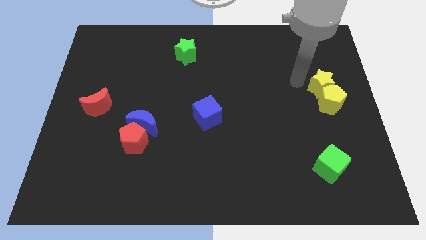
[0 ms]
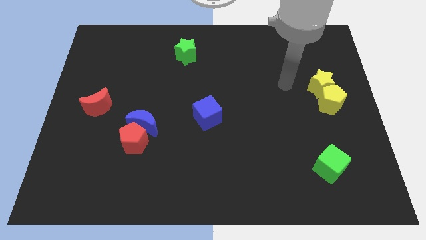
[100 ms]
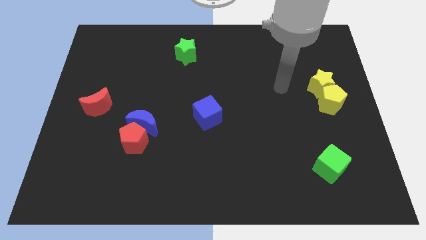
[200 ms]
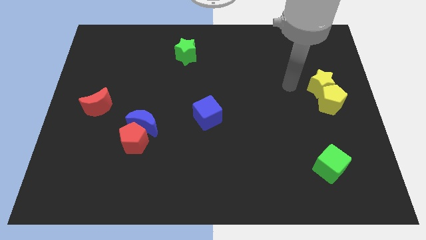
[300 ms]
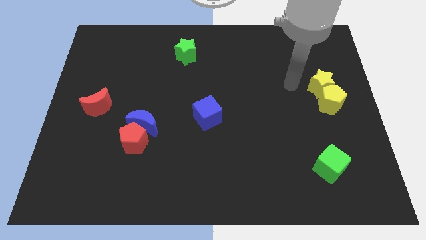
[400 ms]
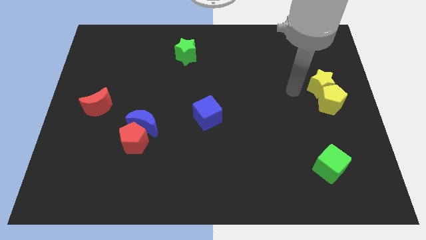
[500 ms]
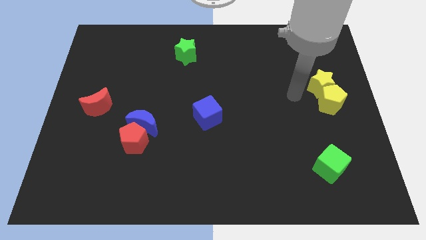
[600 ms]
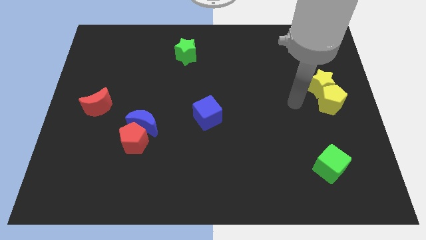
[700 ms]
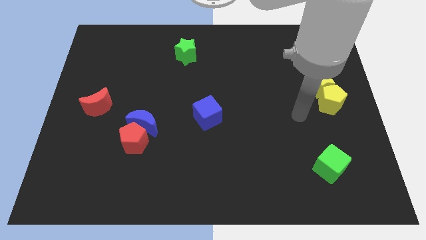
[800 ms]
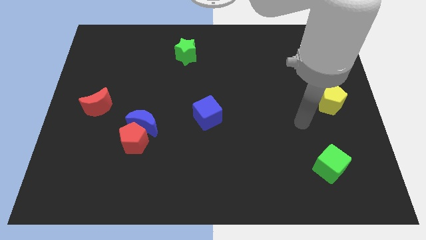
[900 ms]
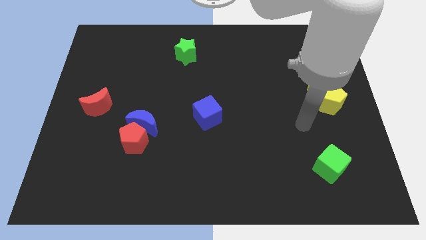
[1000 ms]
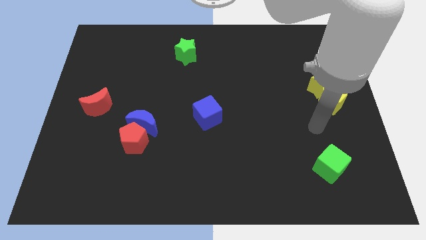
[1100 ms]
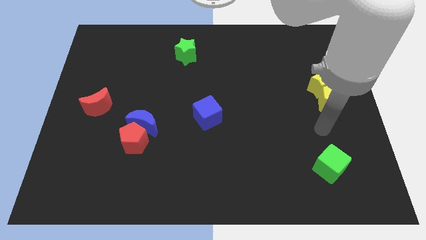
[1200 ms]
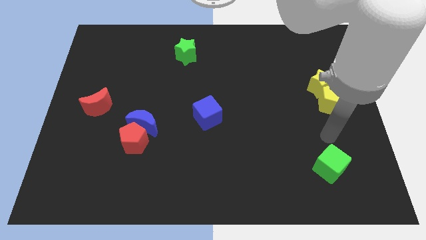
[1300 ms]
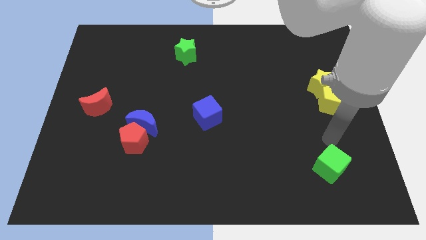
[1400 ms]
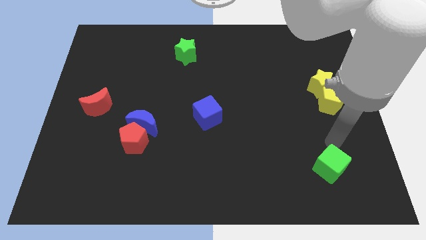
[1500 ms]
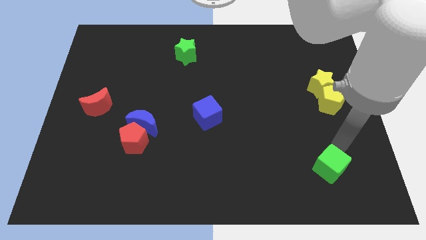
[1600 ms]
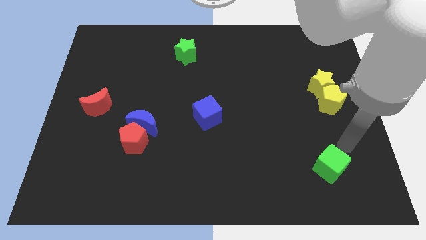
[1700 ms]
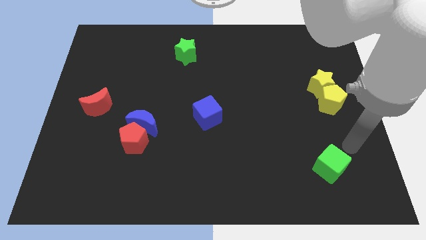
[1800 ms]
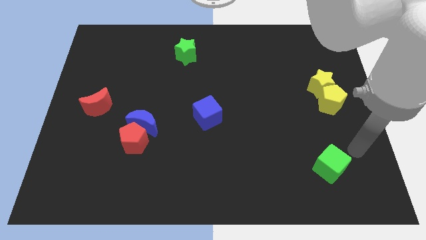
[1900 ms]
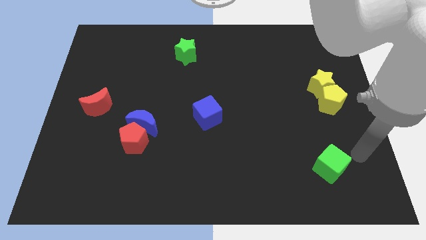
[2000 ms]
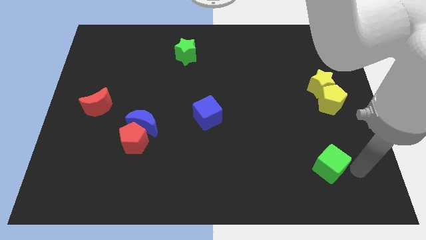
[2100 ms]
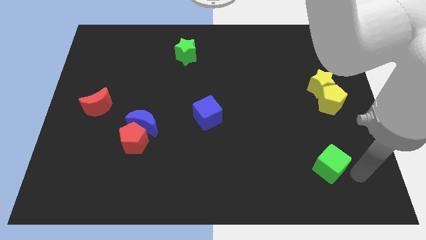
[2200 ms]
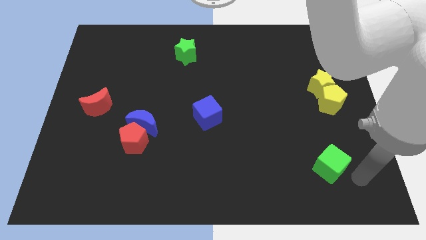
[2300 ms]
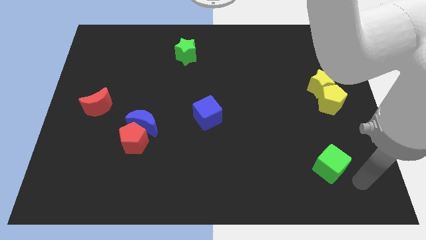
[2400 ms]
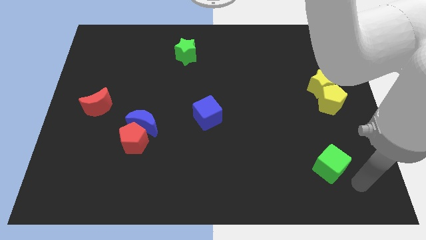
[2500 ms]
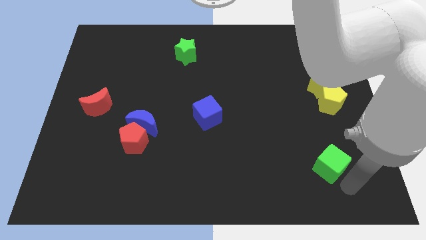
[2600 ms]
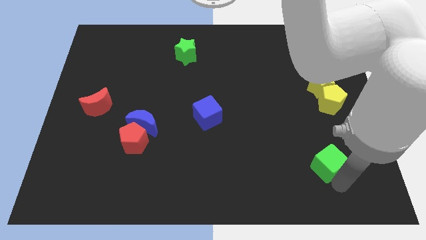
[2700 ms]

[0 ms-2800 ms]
point the arm to the bottom right of the green cube

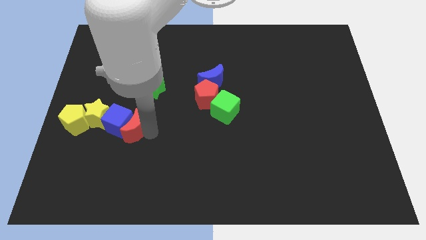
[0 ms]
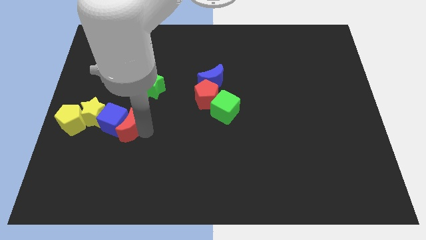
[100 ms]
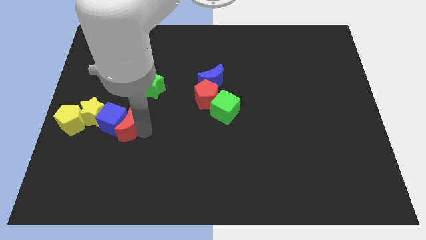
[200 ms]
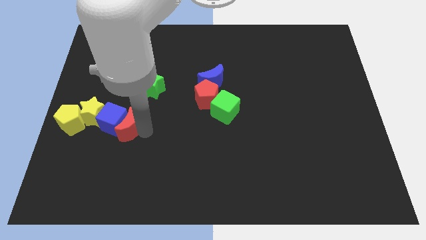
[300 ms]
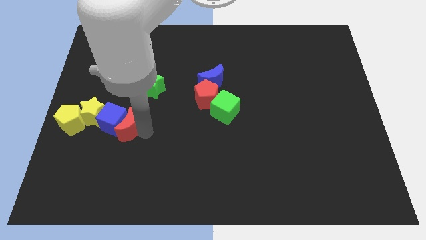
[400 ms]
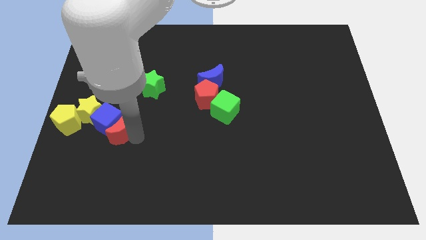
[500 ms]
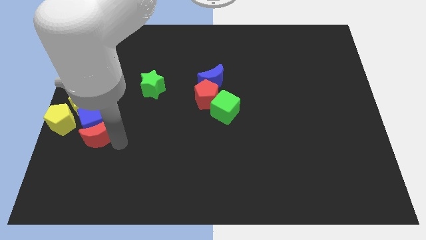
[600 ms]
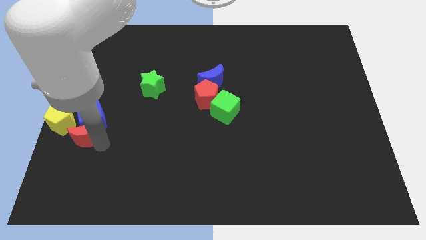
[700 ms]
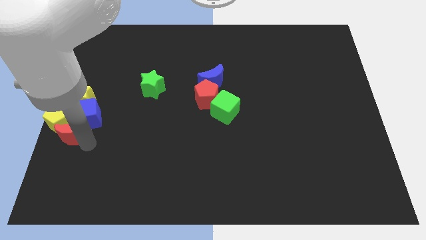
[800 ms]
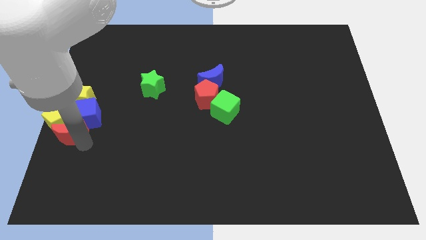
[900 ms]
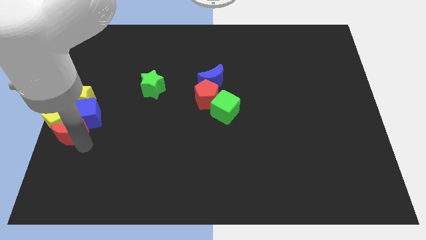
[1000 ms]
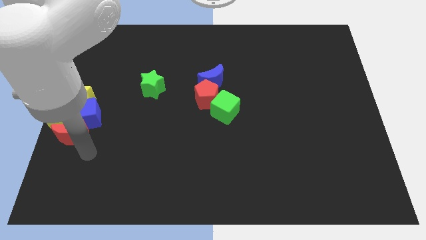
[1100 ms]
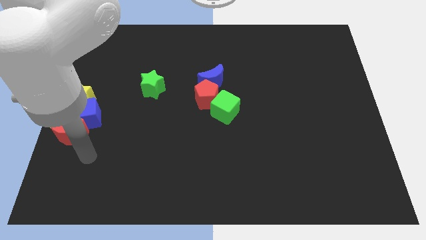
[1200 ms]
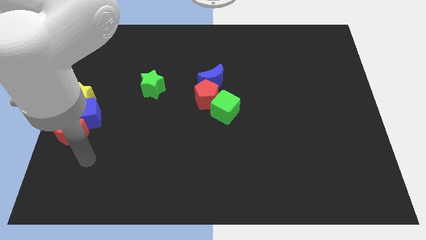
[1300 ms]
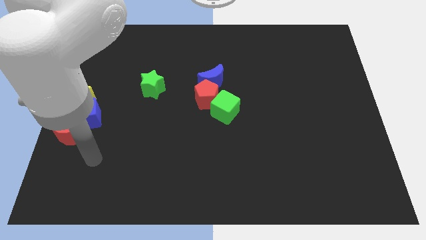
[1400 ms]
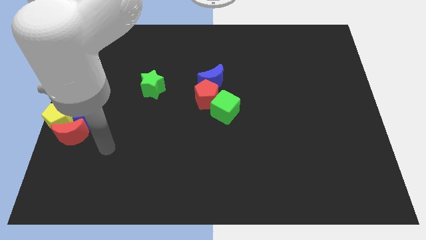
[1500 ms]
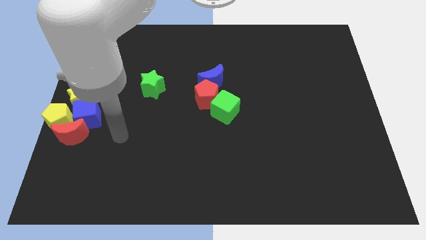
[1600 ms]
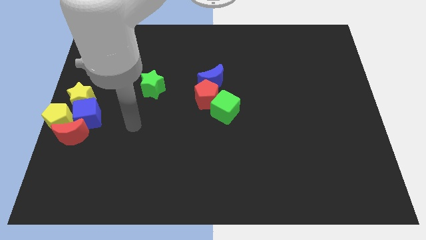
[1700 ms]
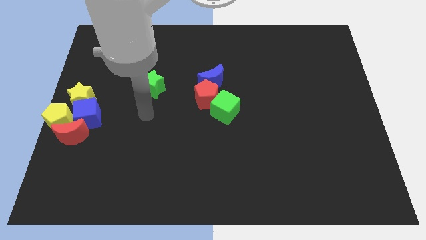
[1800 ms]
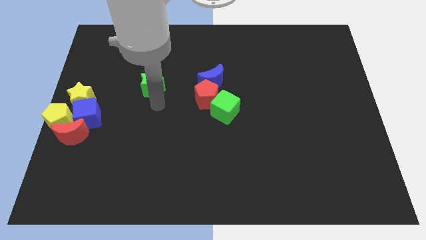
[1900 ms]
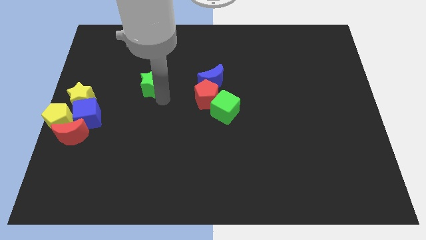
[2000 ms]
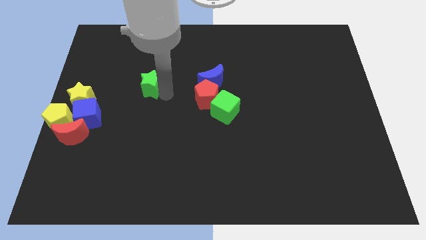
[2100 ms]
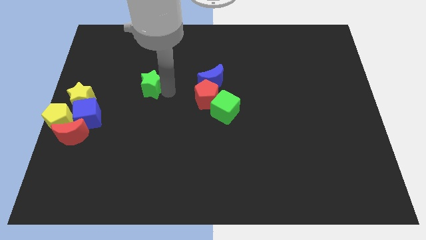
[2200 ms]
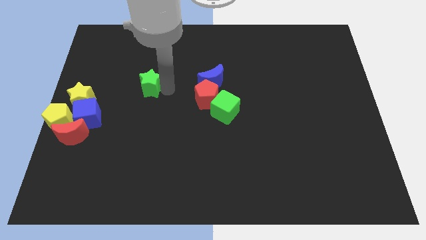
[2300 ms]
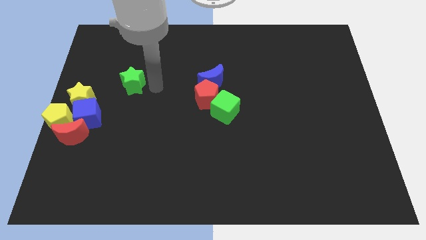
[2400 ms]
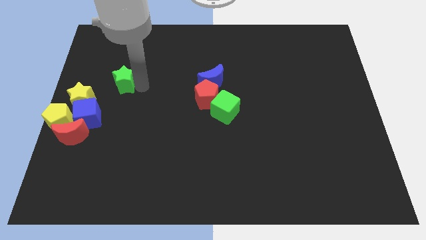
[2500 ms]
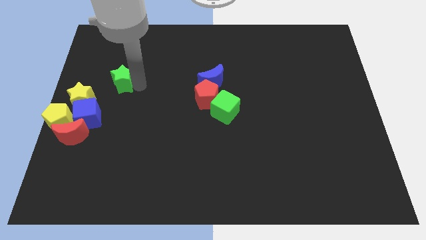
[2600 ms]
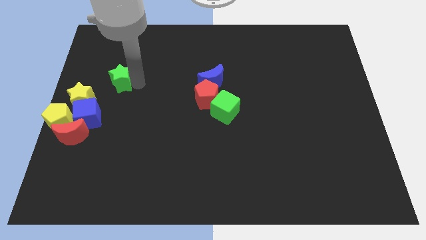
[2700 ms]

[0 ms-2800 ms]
push the group of blocks towards the left center of the board

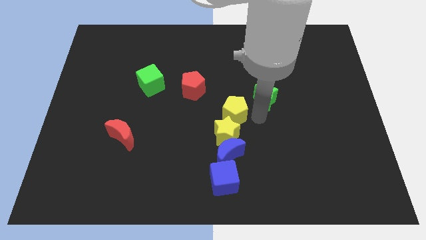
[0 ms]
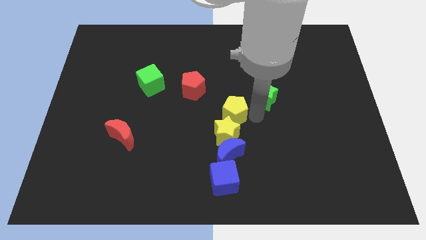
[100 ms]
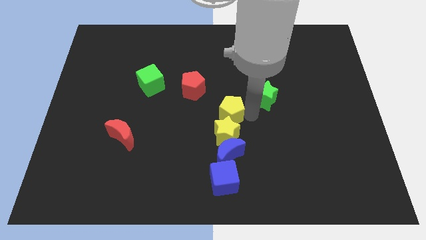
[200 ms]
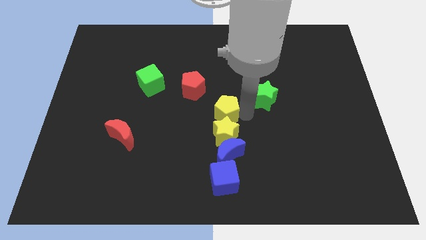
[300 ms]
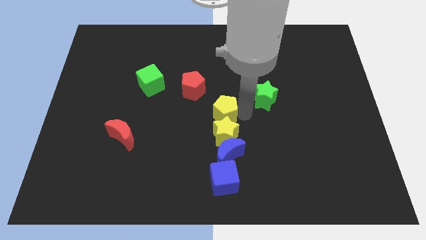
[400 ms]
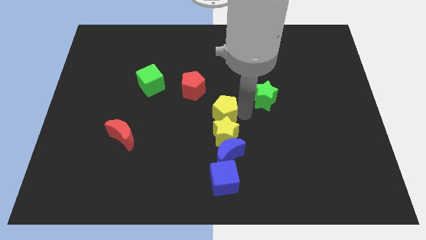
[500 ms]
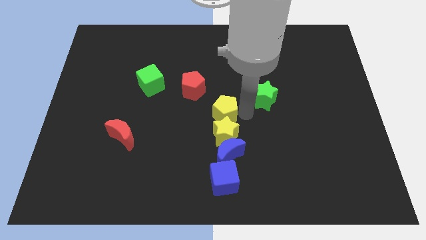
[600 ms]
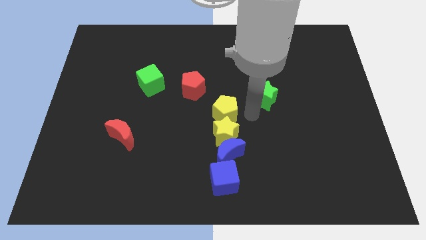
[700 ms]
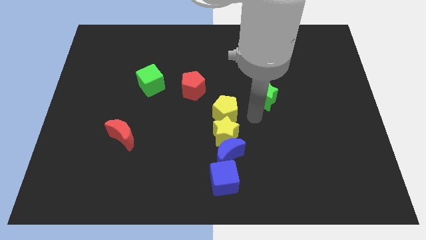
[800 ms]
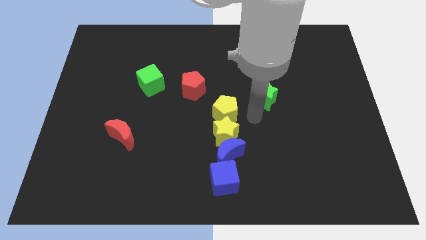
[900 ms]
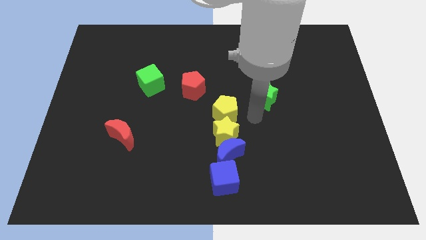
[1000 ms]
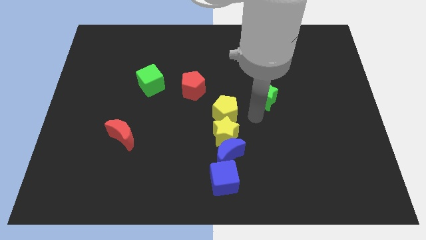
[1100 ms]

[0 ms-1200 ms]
place the yellow pentagon to the top of the yellow star

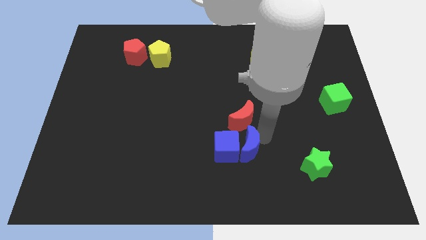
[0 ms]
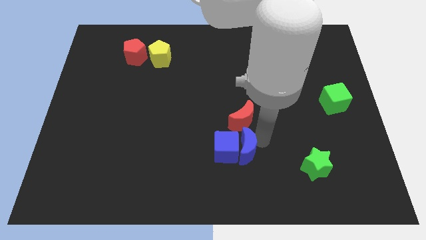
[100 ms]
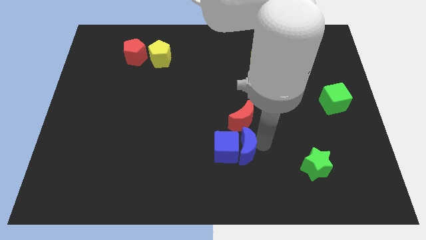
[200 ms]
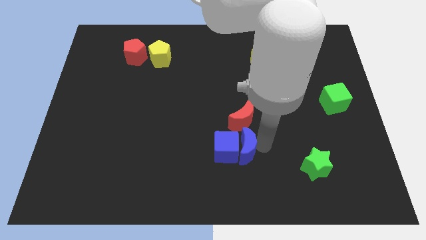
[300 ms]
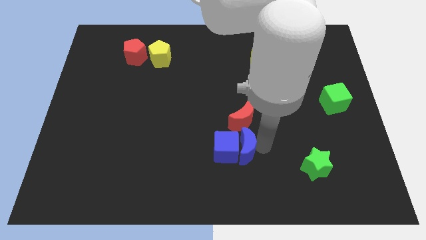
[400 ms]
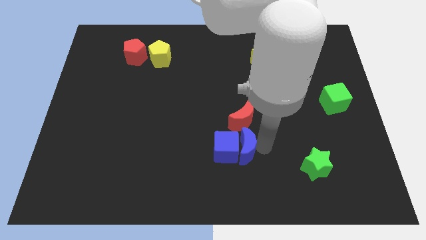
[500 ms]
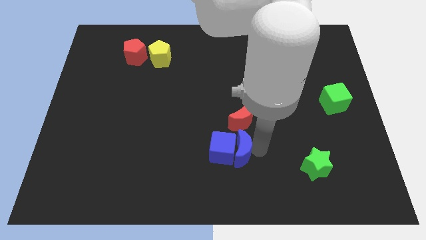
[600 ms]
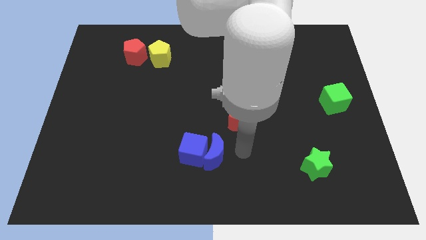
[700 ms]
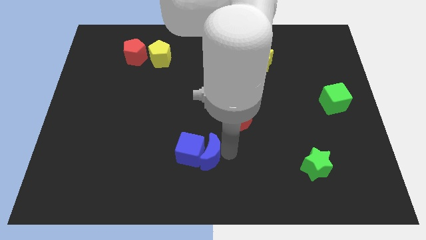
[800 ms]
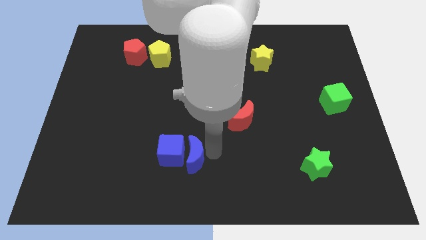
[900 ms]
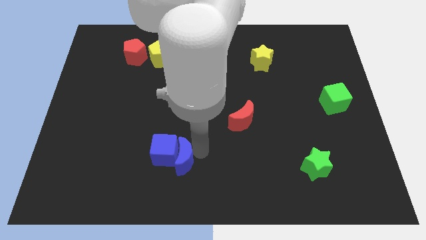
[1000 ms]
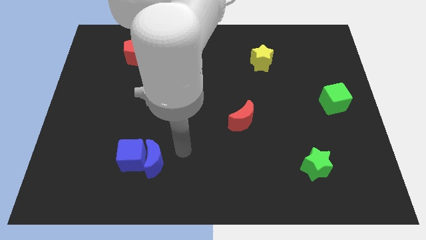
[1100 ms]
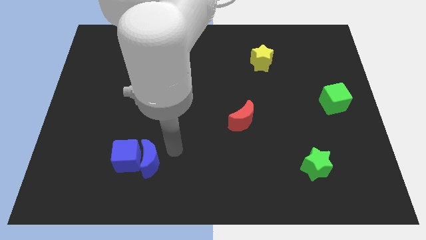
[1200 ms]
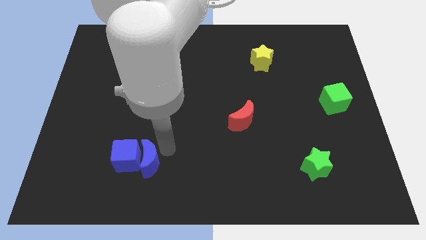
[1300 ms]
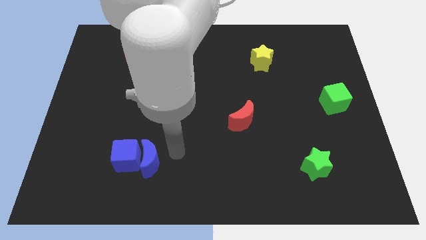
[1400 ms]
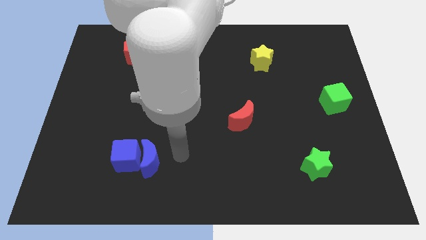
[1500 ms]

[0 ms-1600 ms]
push the blue moon into the blue cube

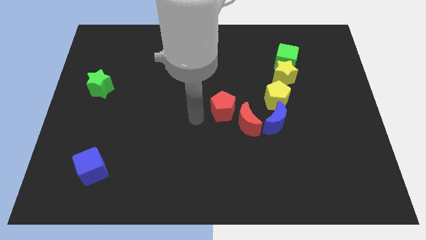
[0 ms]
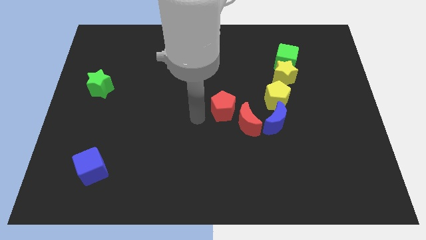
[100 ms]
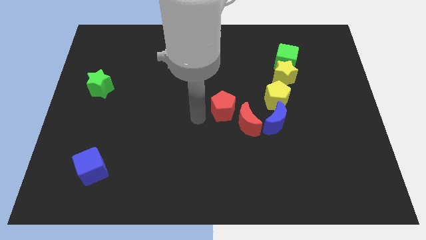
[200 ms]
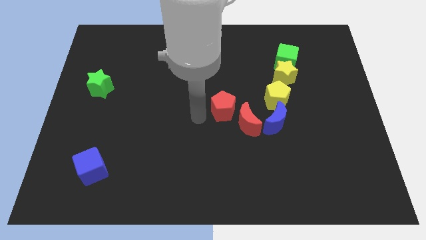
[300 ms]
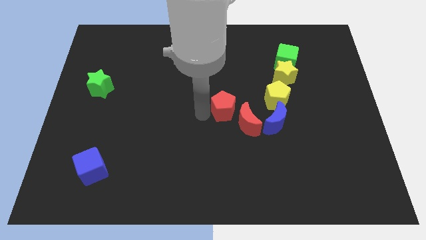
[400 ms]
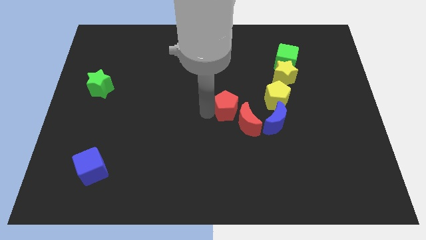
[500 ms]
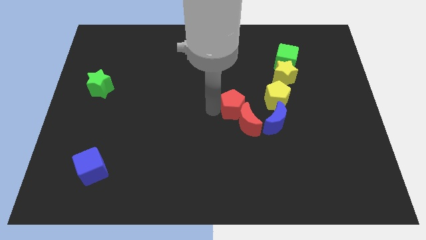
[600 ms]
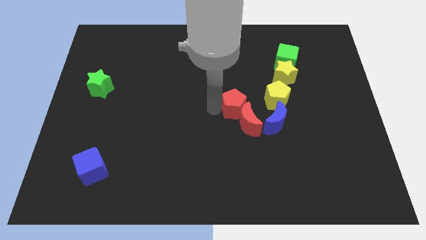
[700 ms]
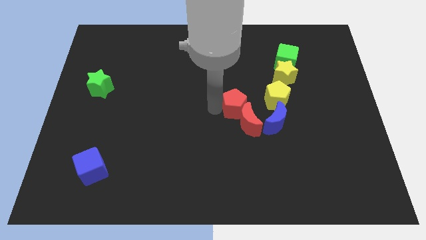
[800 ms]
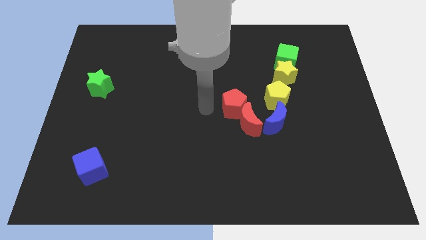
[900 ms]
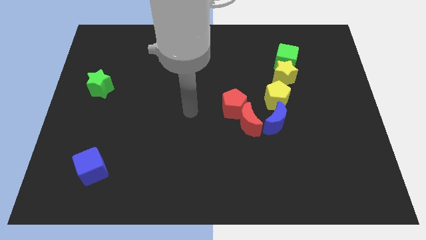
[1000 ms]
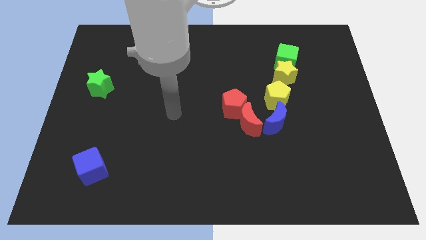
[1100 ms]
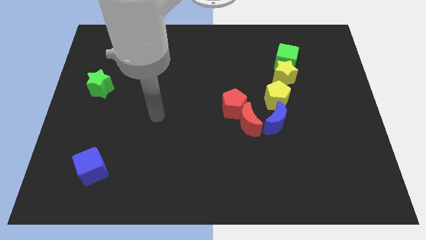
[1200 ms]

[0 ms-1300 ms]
push the red pentagon into the red moon
